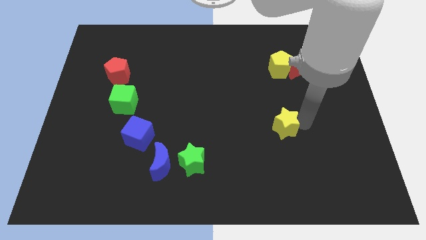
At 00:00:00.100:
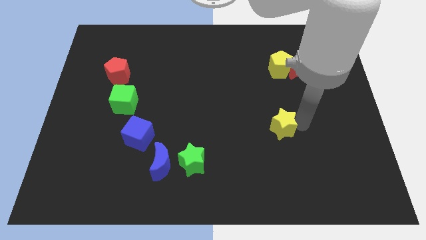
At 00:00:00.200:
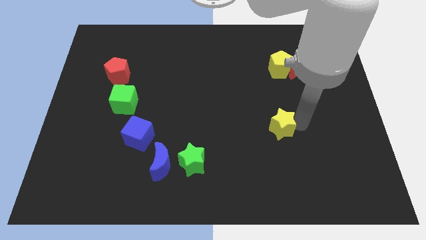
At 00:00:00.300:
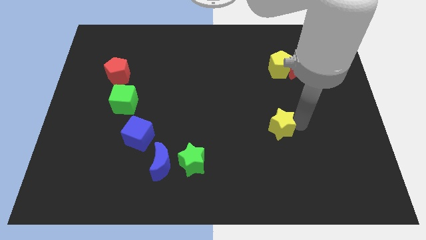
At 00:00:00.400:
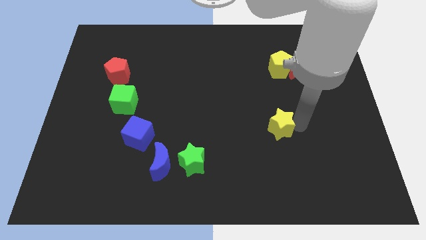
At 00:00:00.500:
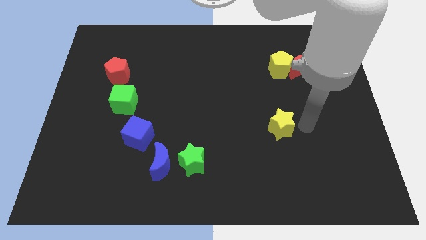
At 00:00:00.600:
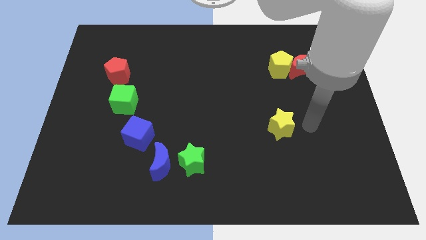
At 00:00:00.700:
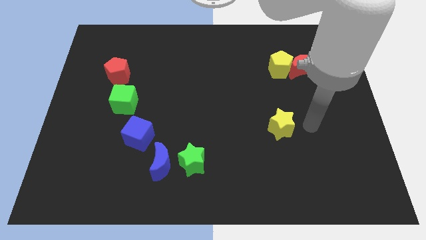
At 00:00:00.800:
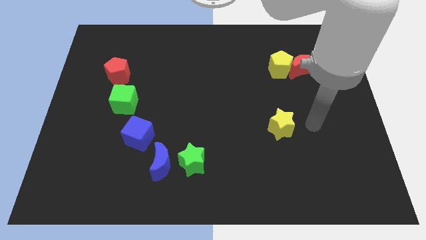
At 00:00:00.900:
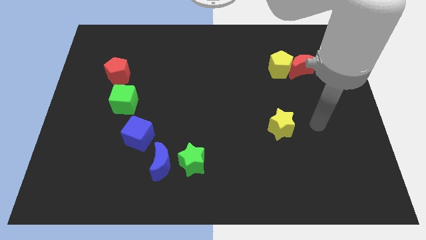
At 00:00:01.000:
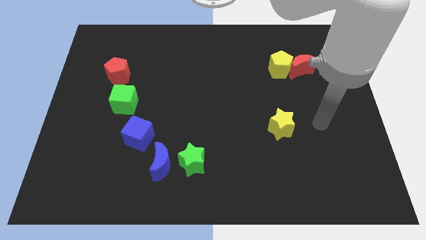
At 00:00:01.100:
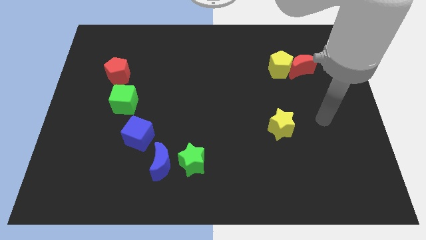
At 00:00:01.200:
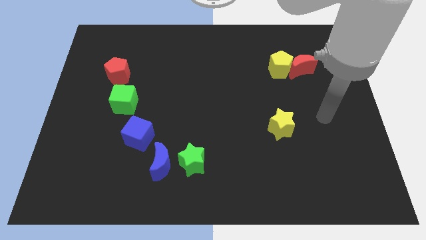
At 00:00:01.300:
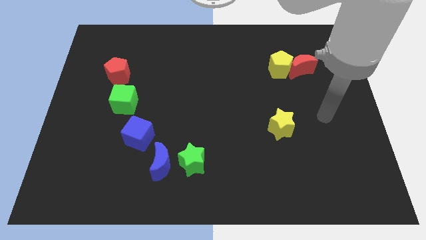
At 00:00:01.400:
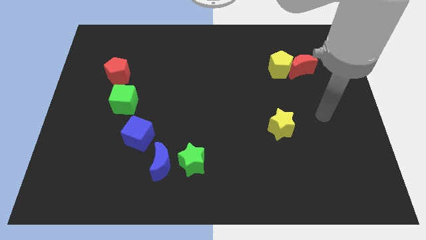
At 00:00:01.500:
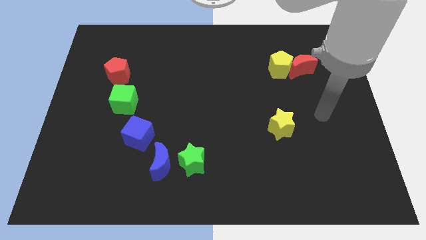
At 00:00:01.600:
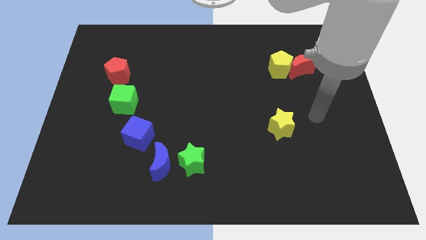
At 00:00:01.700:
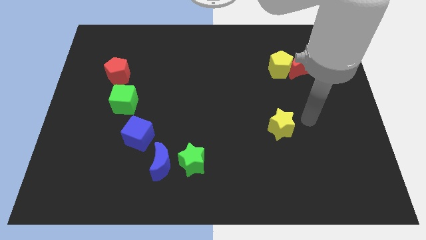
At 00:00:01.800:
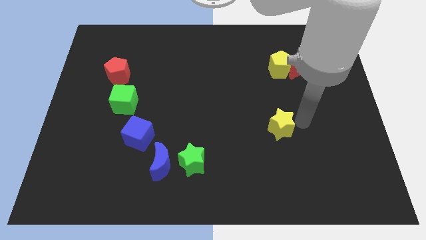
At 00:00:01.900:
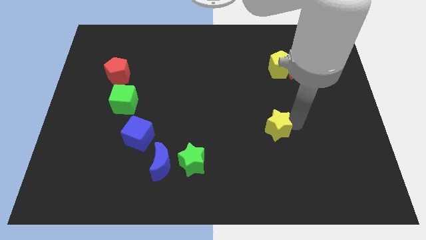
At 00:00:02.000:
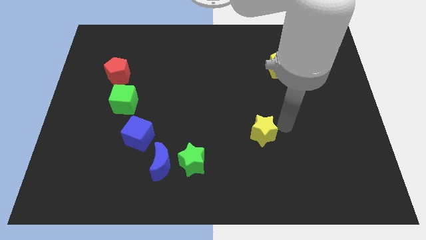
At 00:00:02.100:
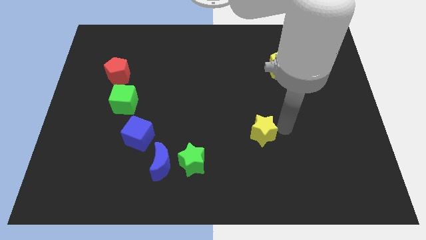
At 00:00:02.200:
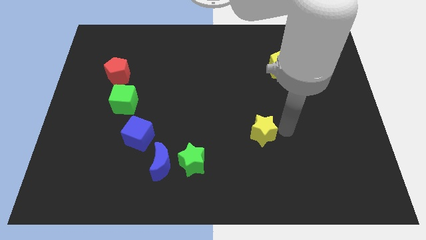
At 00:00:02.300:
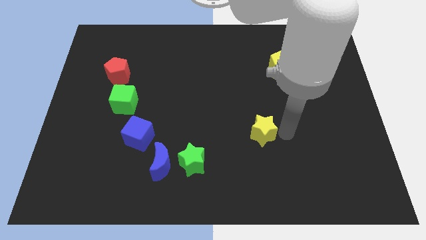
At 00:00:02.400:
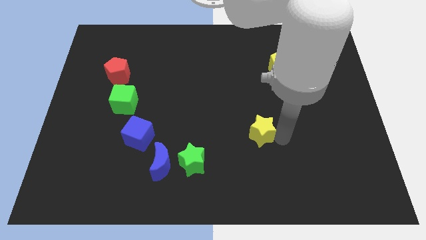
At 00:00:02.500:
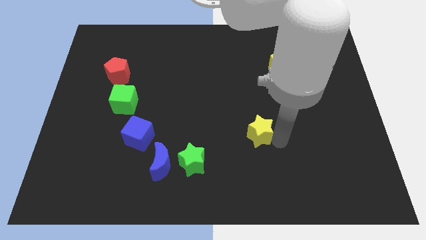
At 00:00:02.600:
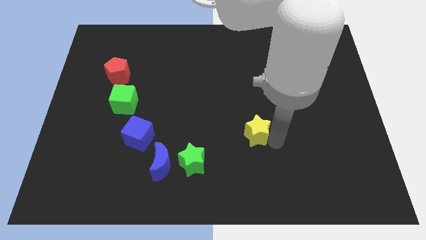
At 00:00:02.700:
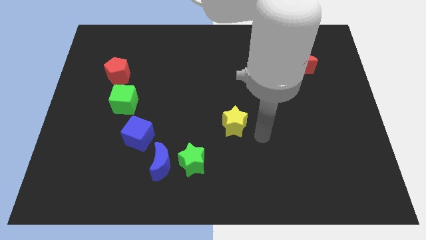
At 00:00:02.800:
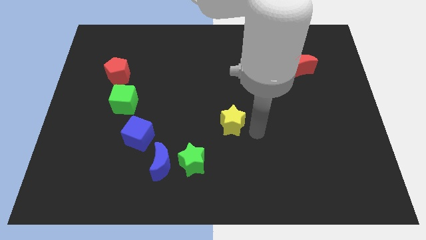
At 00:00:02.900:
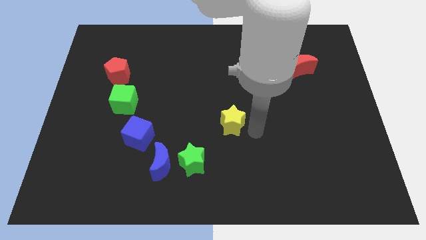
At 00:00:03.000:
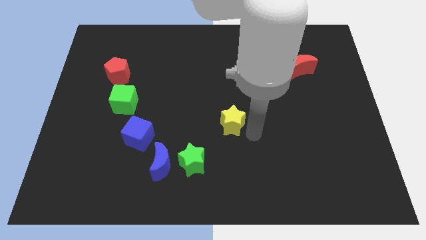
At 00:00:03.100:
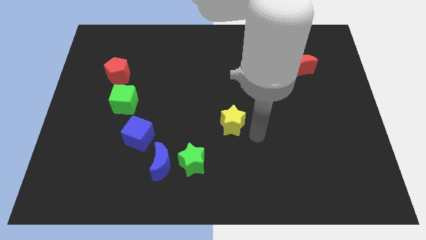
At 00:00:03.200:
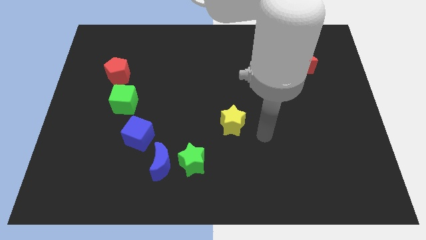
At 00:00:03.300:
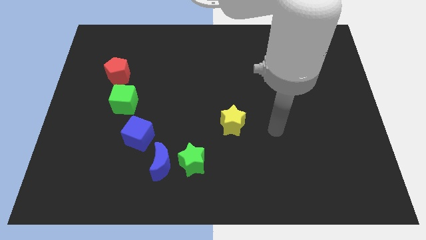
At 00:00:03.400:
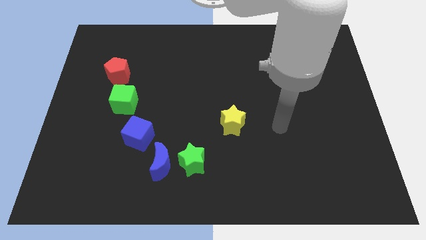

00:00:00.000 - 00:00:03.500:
move the yellow star to the top right of the green star

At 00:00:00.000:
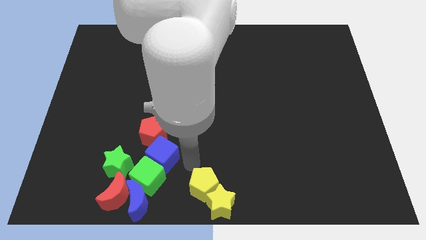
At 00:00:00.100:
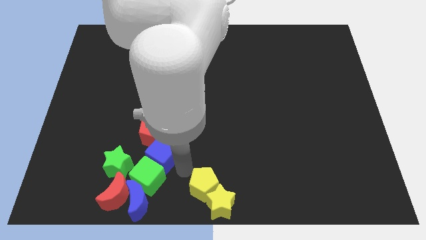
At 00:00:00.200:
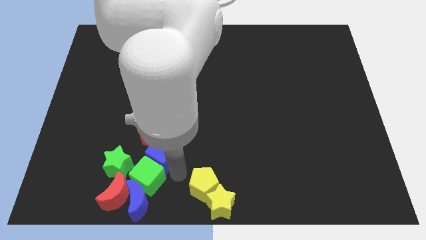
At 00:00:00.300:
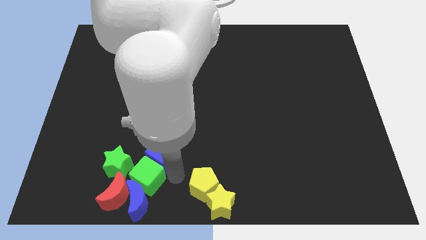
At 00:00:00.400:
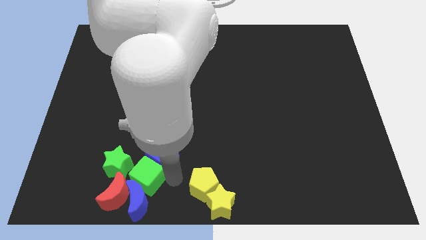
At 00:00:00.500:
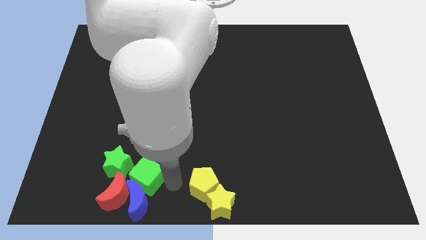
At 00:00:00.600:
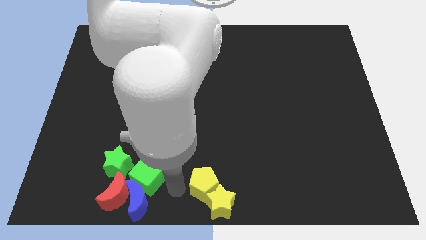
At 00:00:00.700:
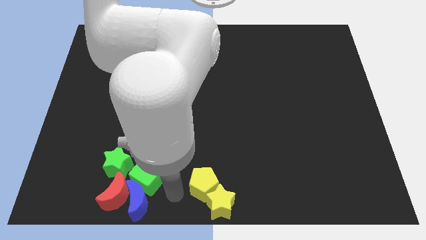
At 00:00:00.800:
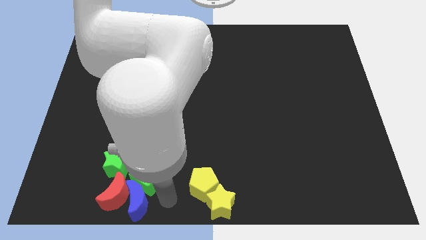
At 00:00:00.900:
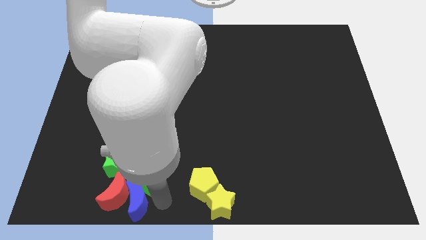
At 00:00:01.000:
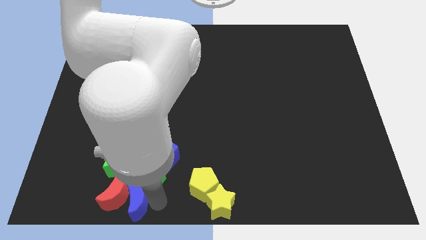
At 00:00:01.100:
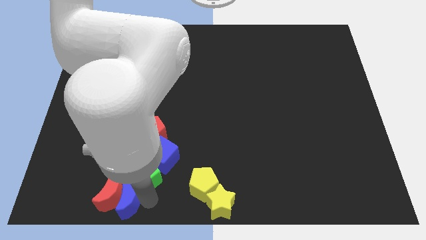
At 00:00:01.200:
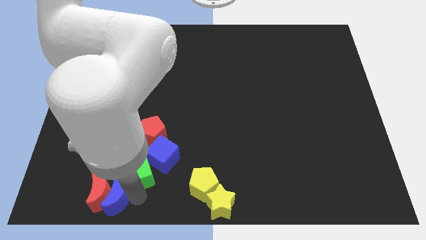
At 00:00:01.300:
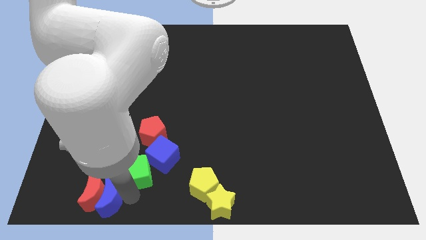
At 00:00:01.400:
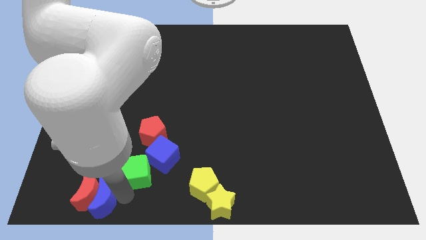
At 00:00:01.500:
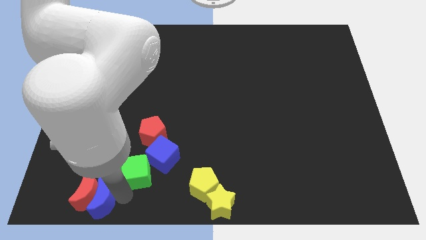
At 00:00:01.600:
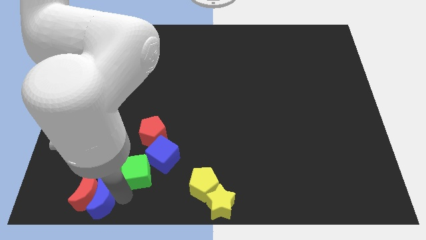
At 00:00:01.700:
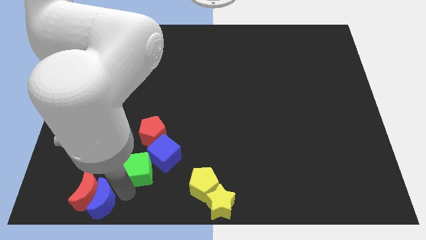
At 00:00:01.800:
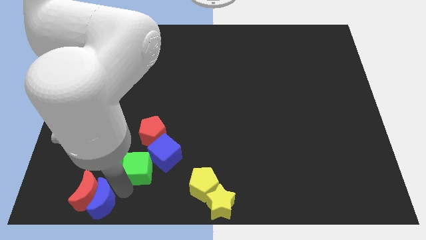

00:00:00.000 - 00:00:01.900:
separate the blue crescent and green cube

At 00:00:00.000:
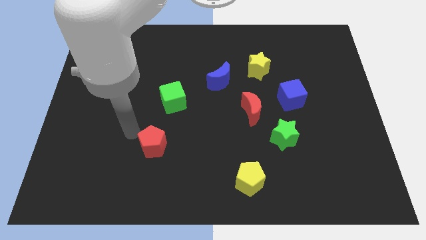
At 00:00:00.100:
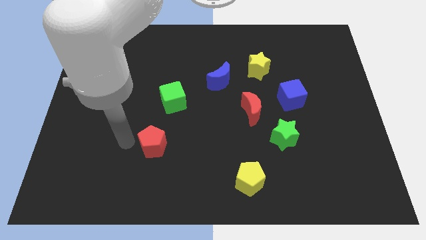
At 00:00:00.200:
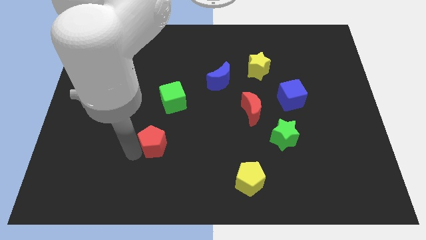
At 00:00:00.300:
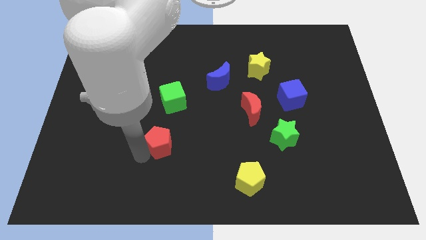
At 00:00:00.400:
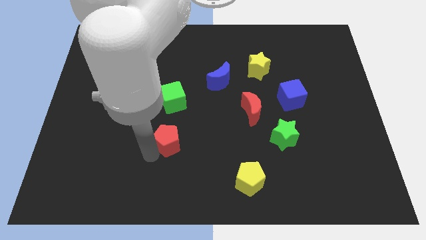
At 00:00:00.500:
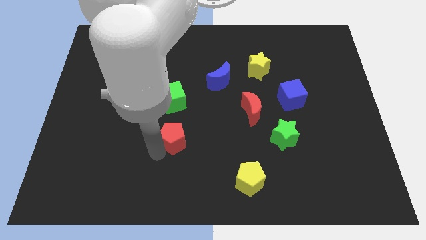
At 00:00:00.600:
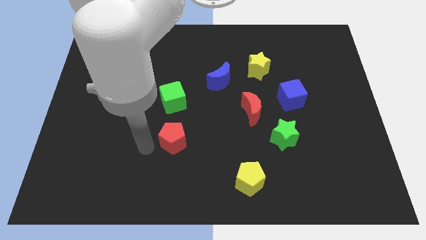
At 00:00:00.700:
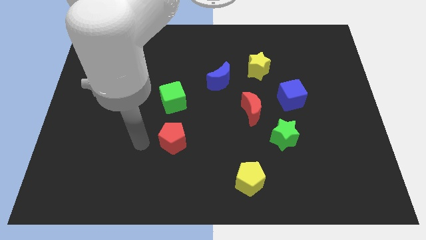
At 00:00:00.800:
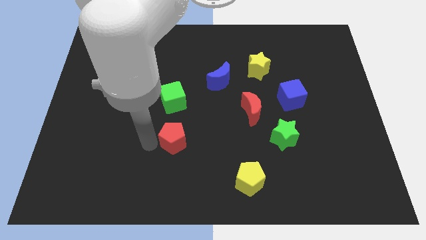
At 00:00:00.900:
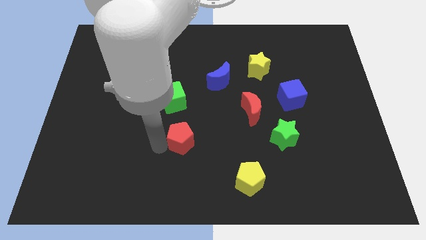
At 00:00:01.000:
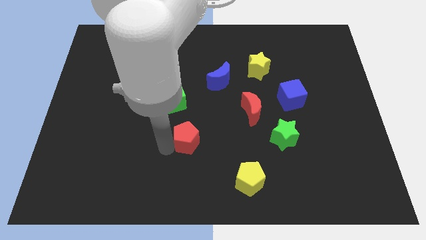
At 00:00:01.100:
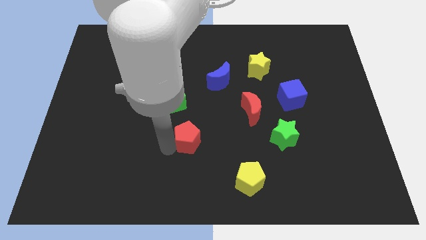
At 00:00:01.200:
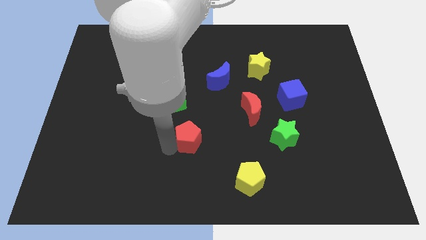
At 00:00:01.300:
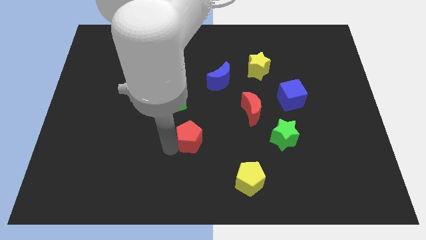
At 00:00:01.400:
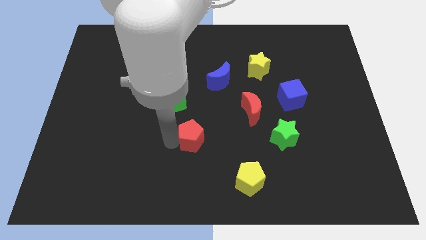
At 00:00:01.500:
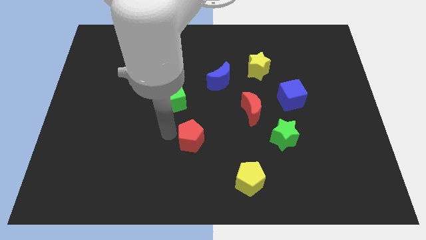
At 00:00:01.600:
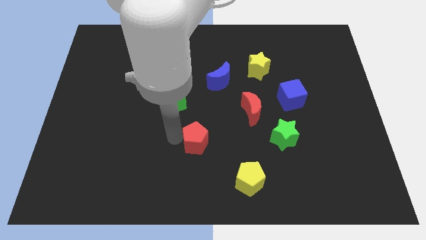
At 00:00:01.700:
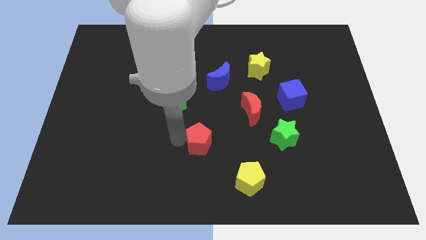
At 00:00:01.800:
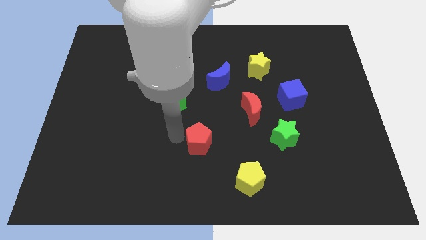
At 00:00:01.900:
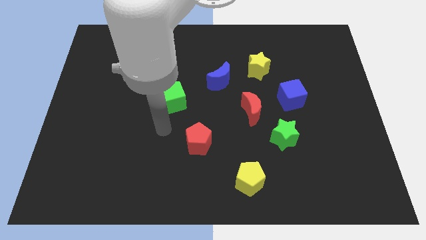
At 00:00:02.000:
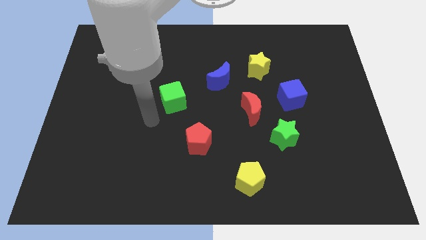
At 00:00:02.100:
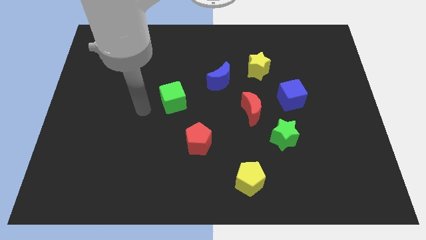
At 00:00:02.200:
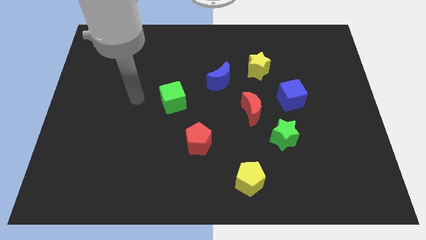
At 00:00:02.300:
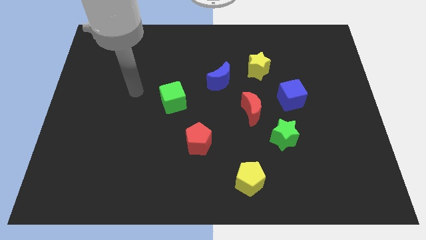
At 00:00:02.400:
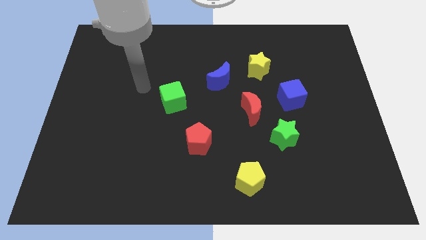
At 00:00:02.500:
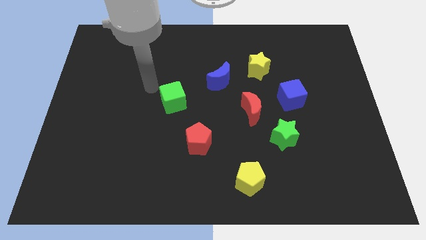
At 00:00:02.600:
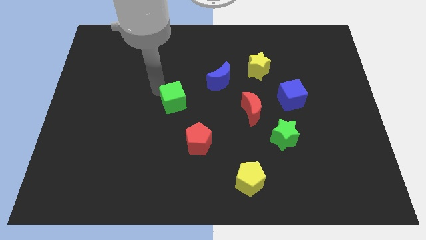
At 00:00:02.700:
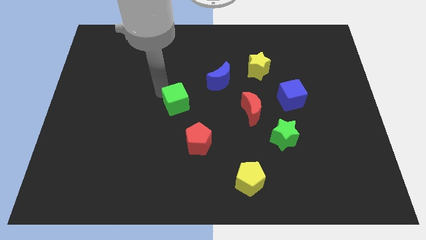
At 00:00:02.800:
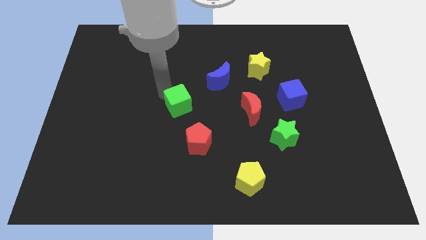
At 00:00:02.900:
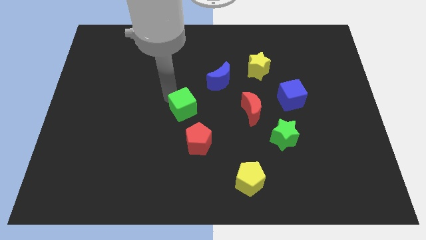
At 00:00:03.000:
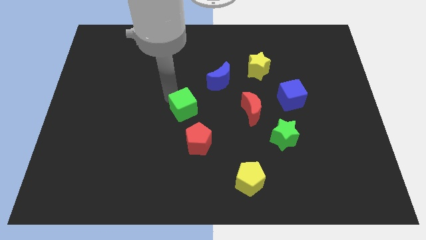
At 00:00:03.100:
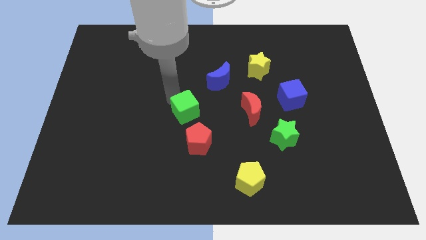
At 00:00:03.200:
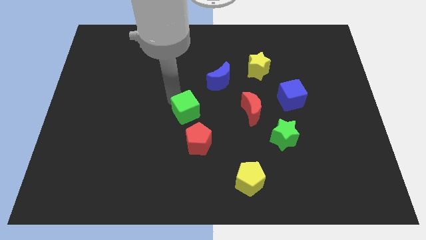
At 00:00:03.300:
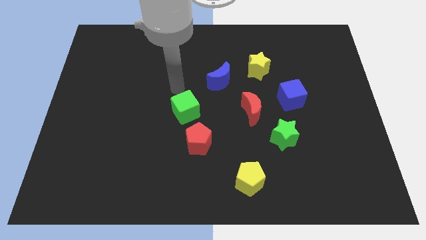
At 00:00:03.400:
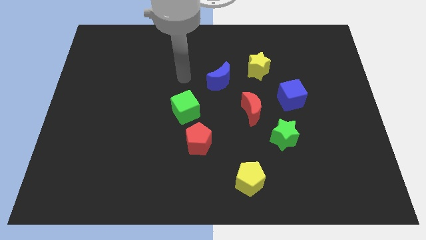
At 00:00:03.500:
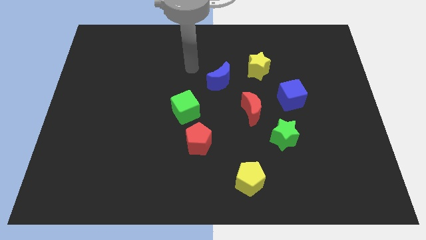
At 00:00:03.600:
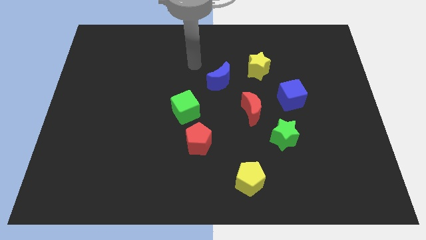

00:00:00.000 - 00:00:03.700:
move the red pentagon and green cube slightly towards the yellow pentagon
